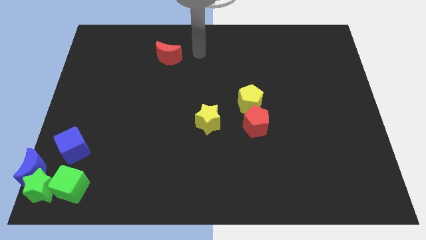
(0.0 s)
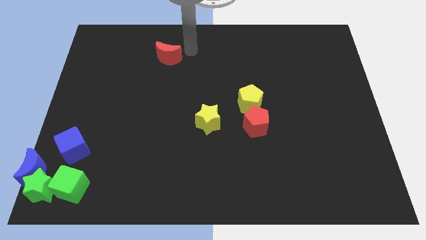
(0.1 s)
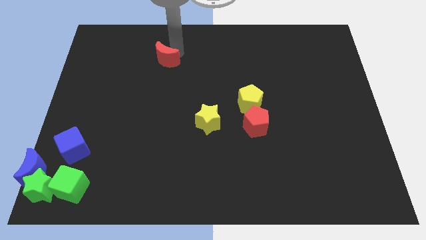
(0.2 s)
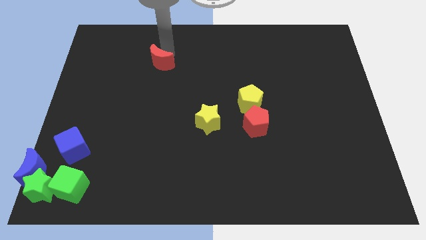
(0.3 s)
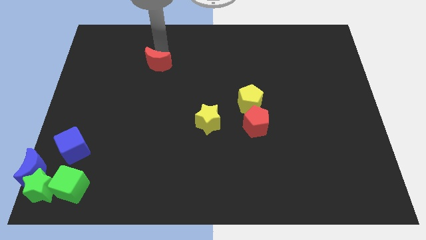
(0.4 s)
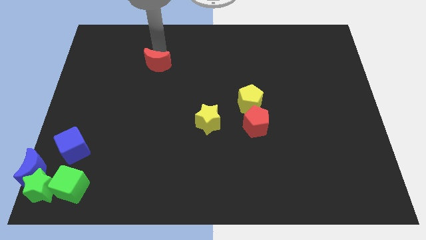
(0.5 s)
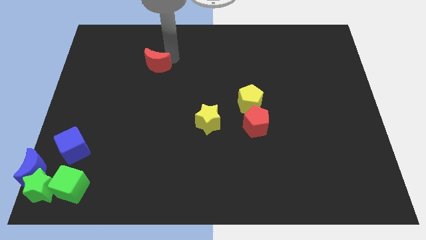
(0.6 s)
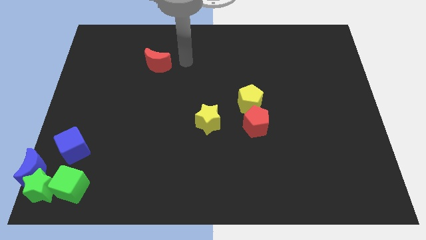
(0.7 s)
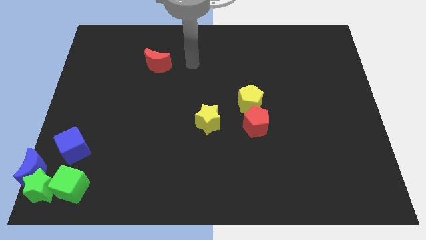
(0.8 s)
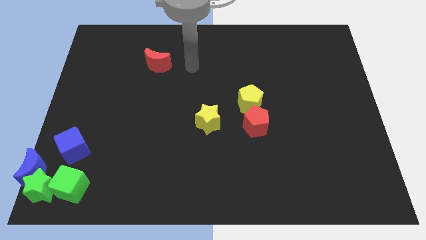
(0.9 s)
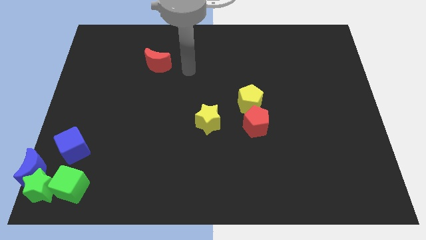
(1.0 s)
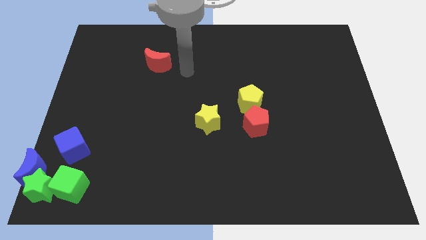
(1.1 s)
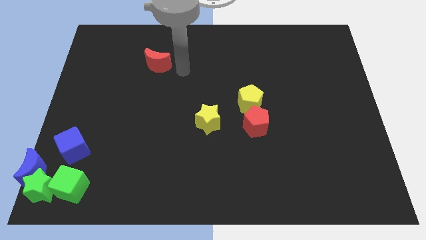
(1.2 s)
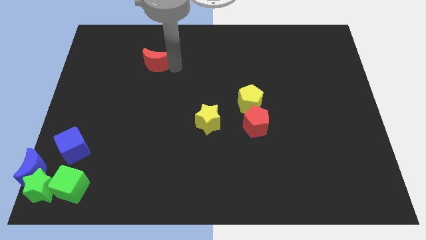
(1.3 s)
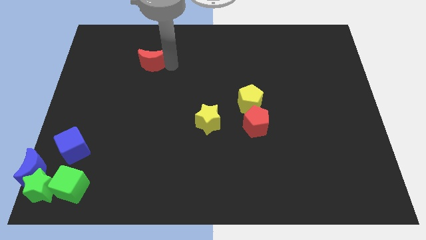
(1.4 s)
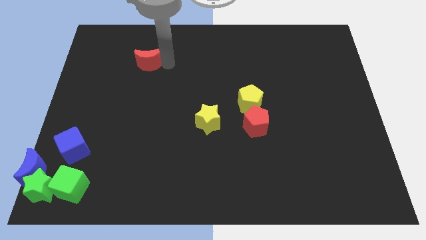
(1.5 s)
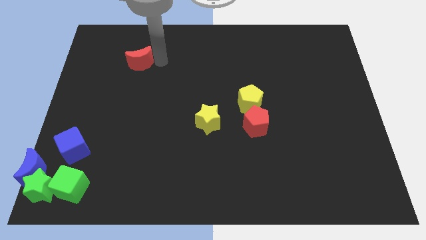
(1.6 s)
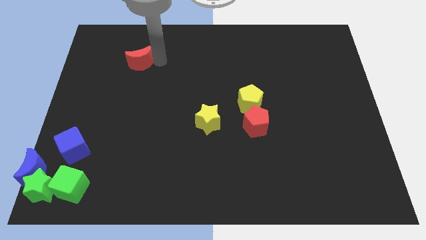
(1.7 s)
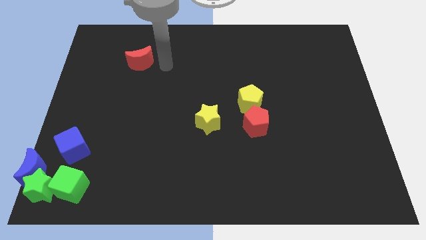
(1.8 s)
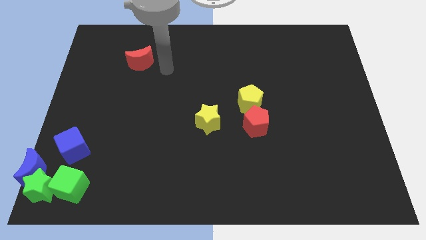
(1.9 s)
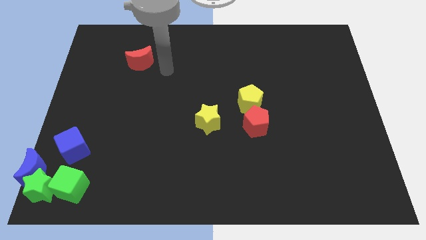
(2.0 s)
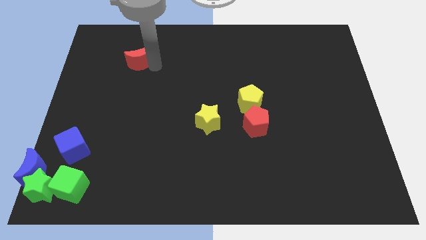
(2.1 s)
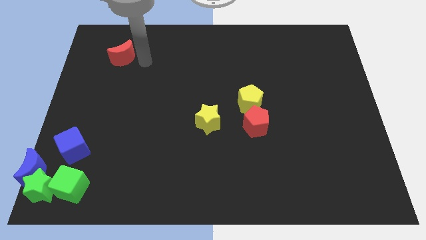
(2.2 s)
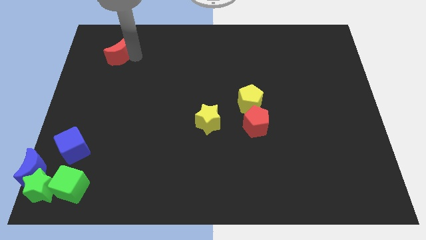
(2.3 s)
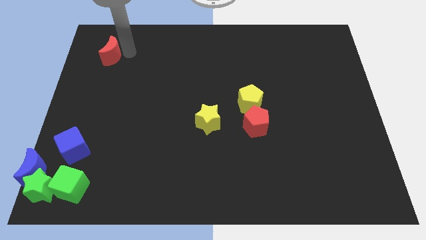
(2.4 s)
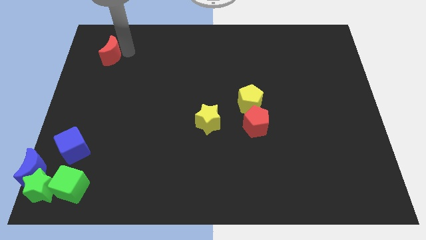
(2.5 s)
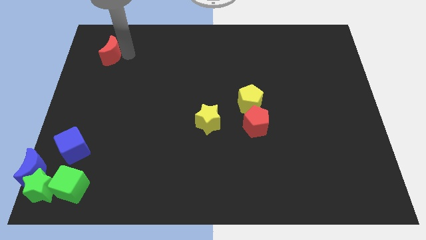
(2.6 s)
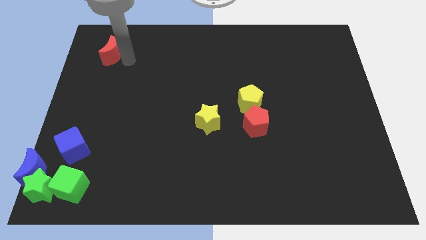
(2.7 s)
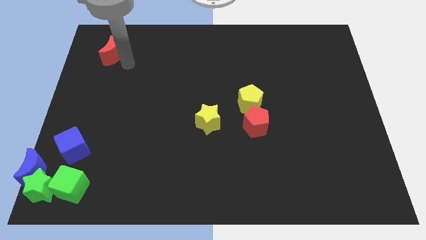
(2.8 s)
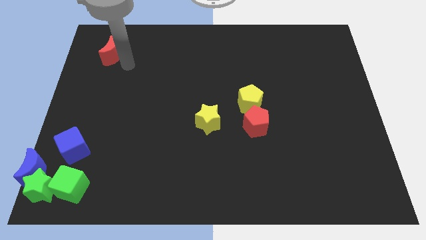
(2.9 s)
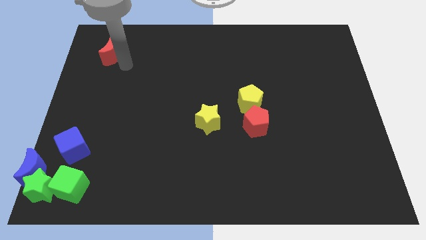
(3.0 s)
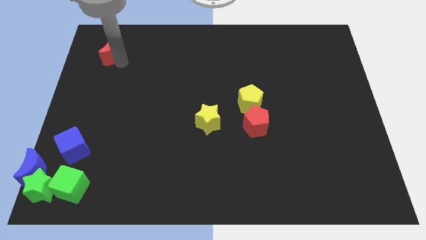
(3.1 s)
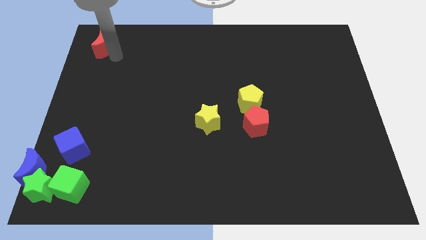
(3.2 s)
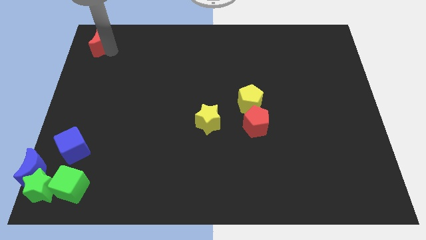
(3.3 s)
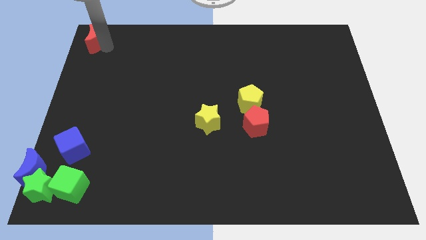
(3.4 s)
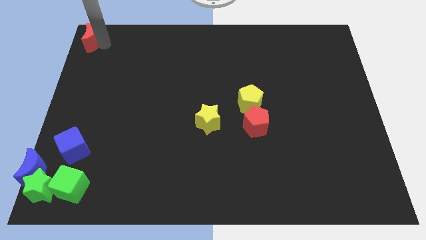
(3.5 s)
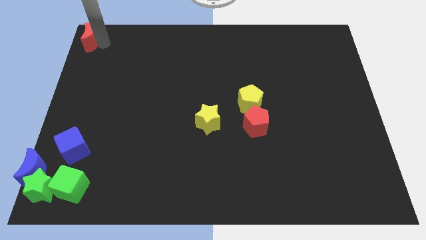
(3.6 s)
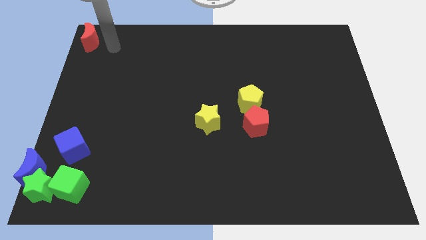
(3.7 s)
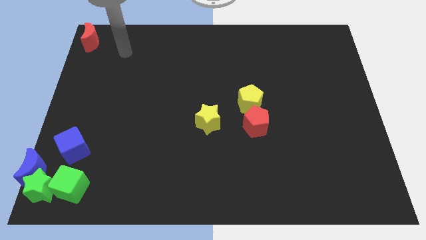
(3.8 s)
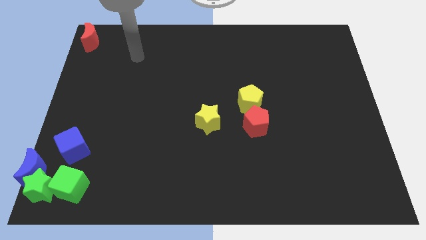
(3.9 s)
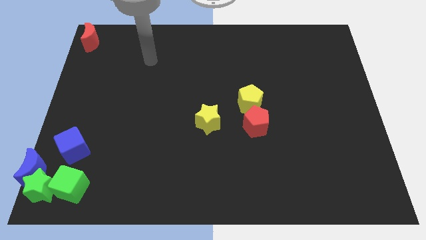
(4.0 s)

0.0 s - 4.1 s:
move the red moon to the top left corner

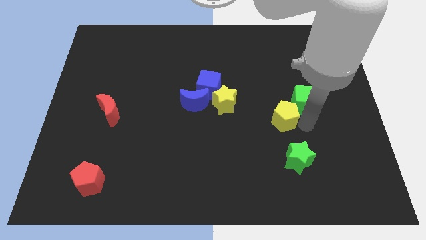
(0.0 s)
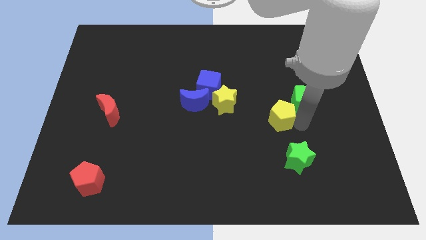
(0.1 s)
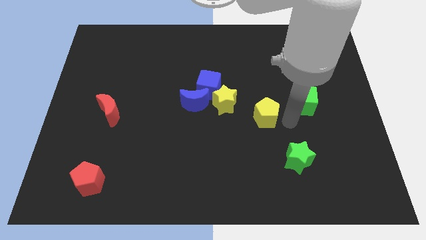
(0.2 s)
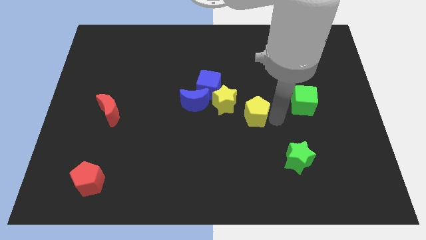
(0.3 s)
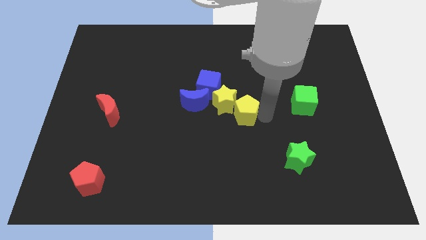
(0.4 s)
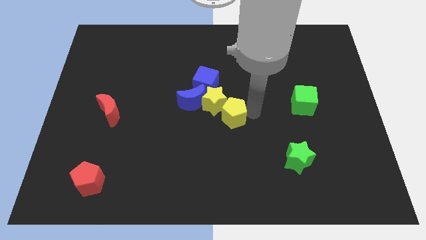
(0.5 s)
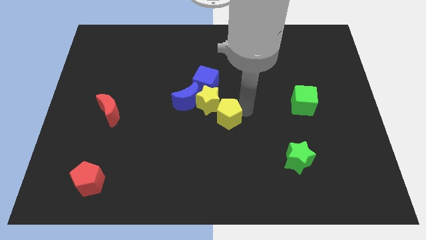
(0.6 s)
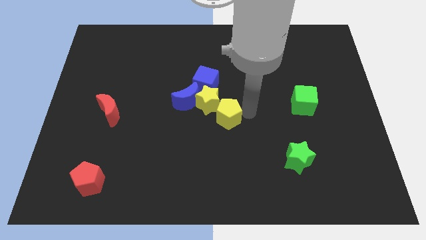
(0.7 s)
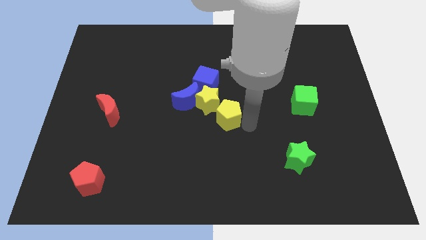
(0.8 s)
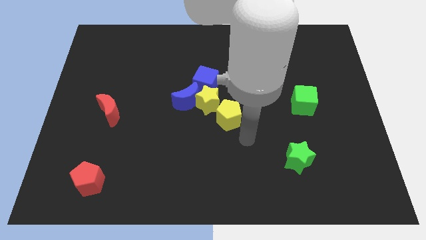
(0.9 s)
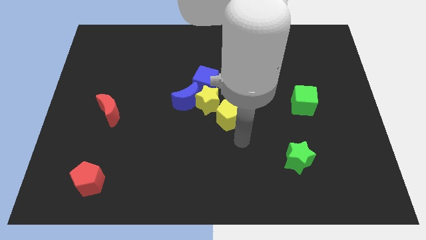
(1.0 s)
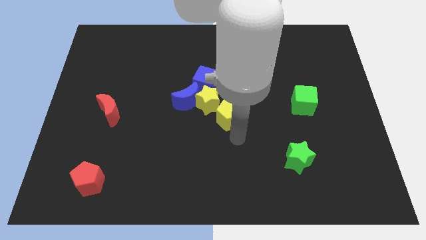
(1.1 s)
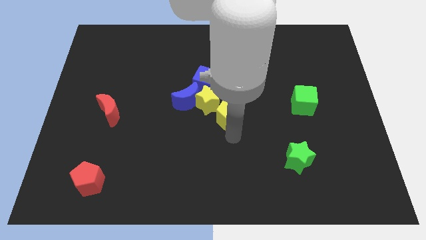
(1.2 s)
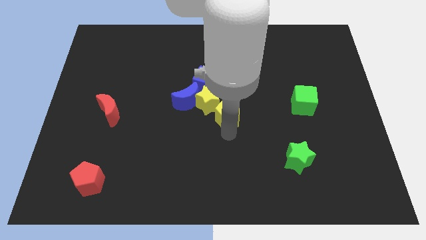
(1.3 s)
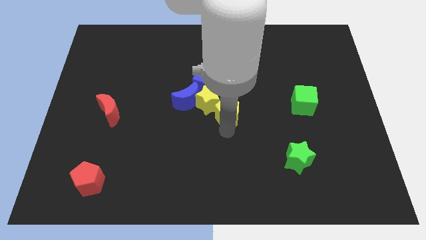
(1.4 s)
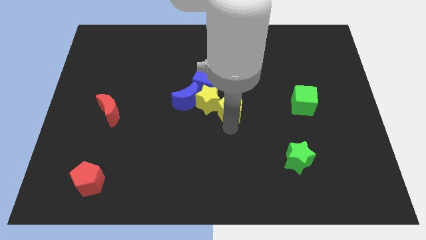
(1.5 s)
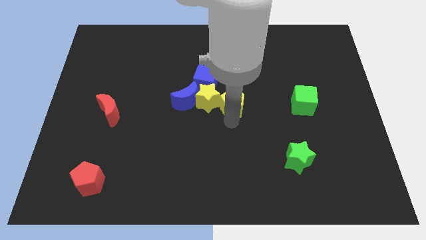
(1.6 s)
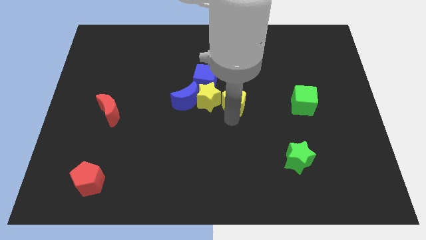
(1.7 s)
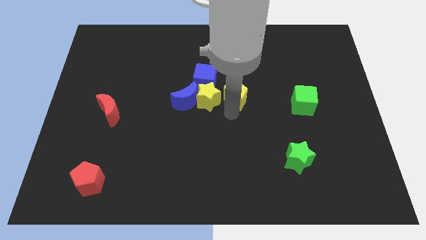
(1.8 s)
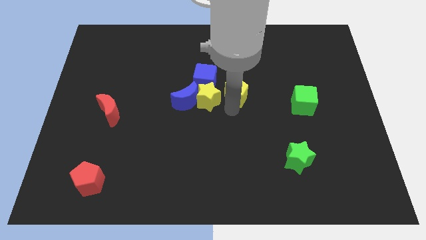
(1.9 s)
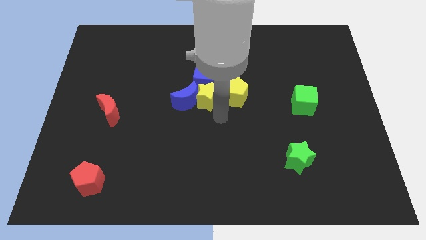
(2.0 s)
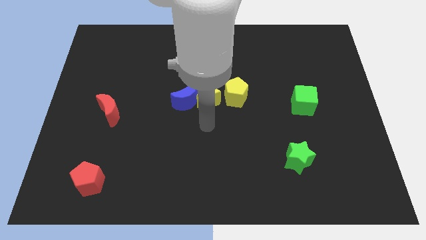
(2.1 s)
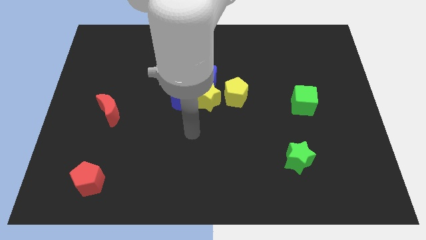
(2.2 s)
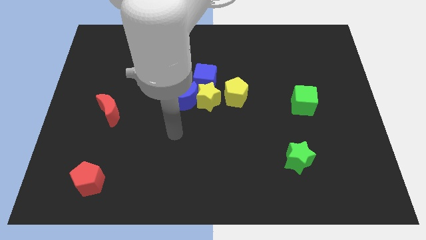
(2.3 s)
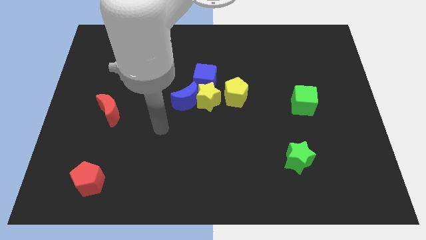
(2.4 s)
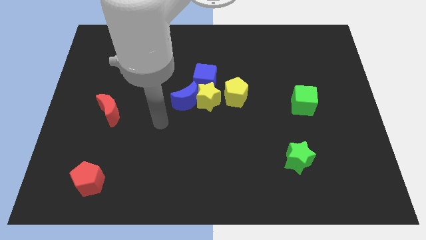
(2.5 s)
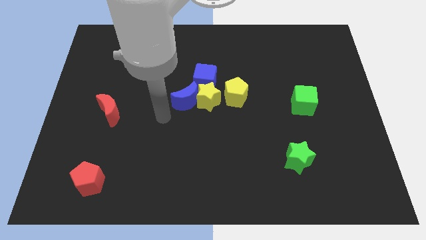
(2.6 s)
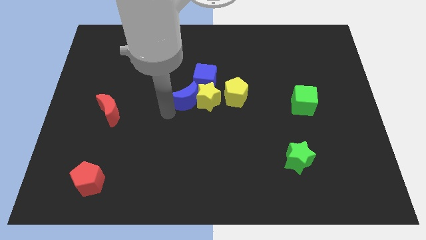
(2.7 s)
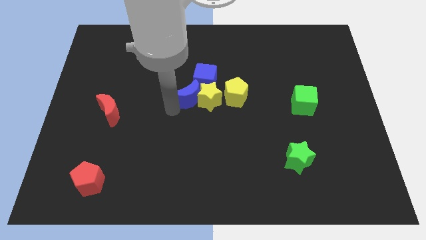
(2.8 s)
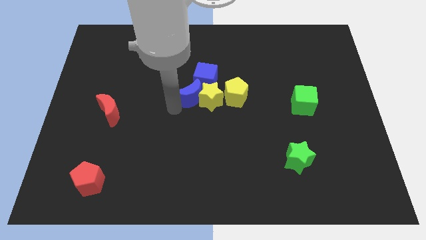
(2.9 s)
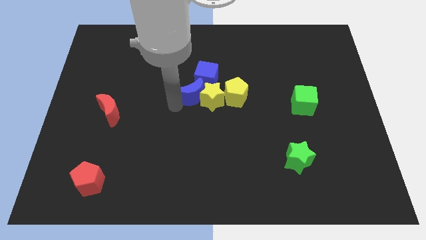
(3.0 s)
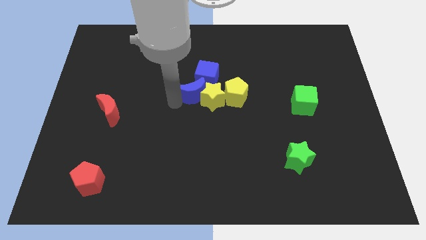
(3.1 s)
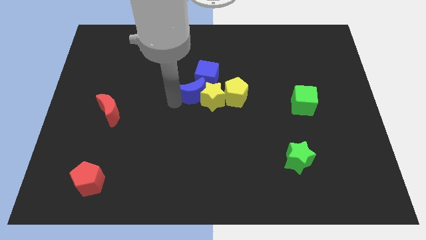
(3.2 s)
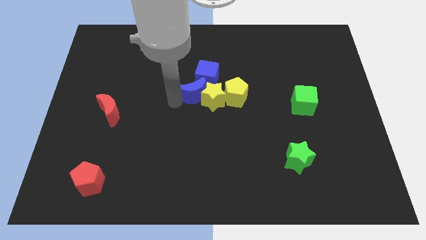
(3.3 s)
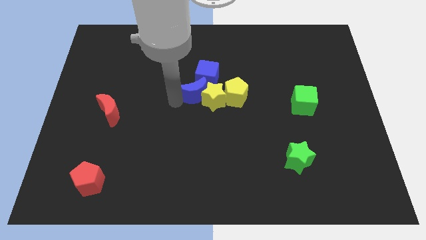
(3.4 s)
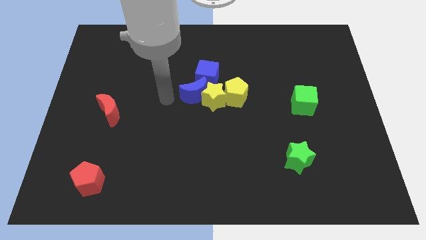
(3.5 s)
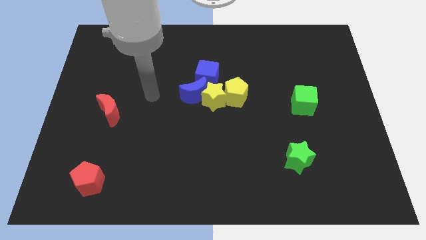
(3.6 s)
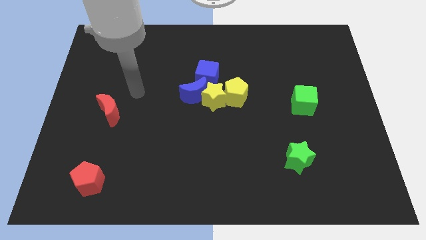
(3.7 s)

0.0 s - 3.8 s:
adjust yellow and blue blocks at the center of the board

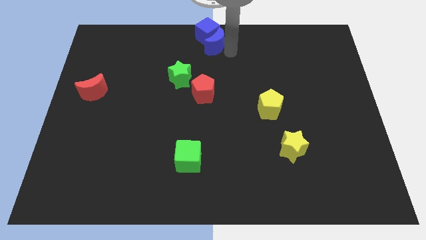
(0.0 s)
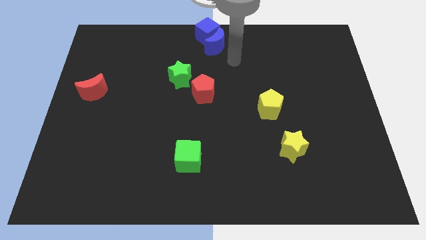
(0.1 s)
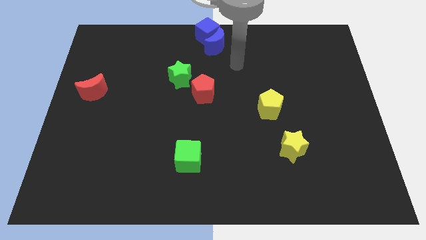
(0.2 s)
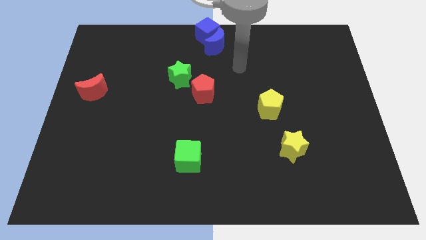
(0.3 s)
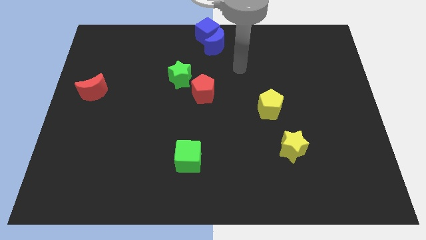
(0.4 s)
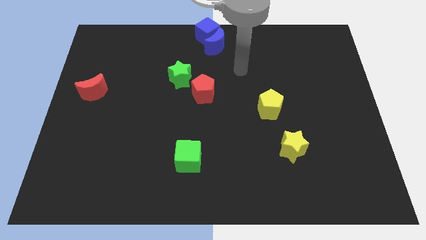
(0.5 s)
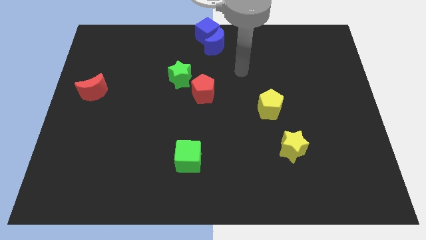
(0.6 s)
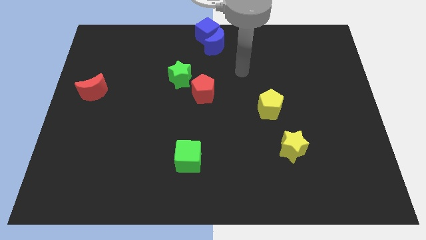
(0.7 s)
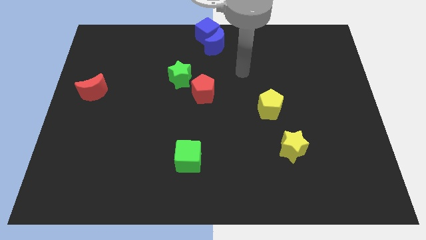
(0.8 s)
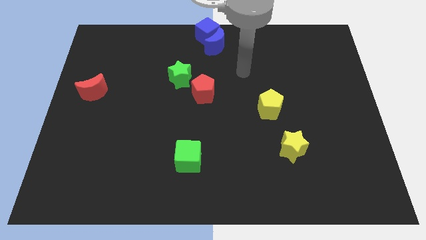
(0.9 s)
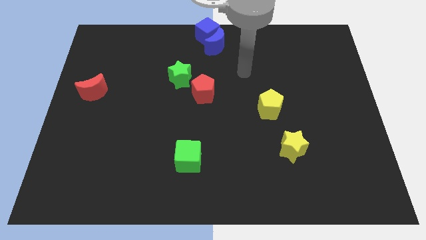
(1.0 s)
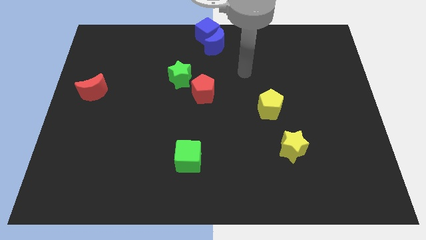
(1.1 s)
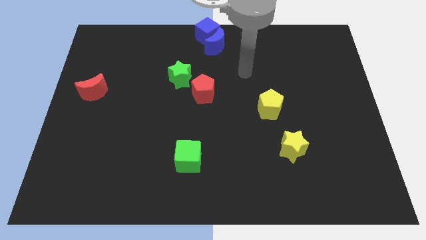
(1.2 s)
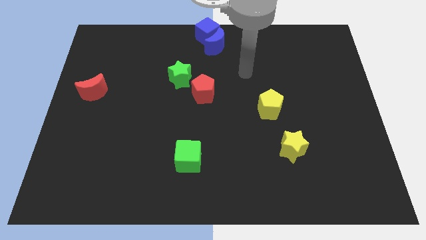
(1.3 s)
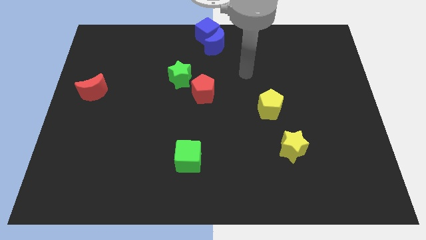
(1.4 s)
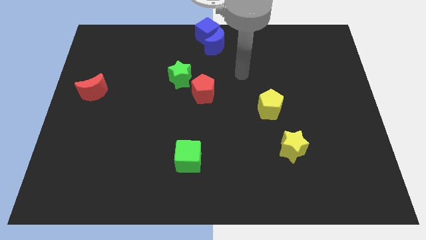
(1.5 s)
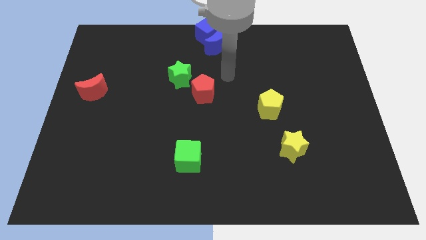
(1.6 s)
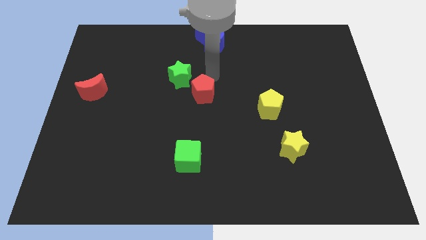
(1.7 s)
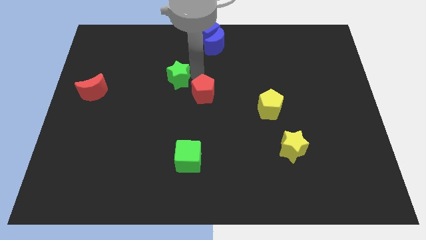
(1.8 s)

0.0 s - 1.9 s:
move your arm to the right of green star
